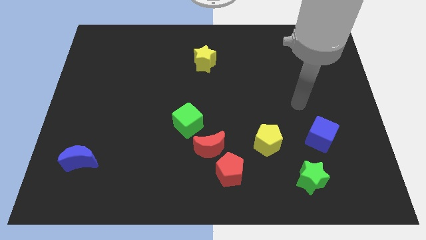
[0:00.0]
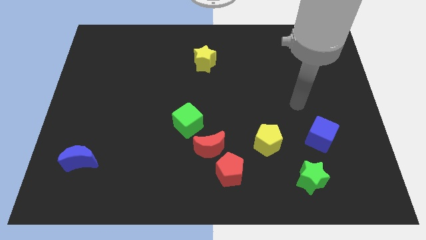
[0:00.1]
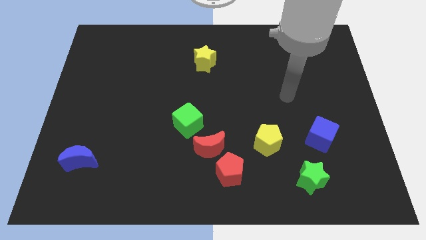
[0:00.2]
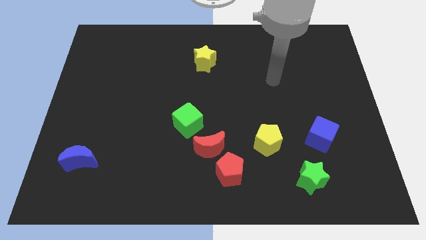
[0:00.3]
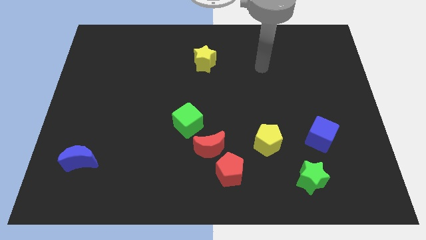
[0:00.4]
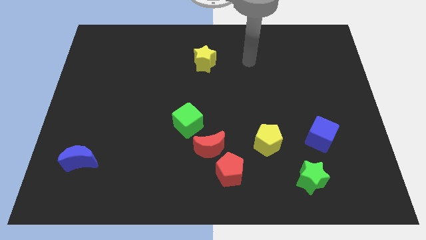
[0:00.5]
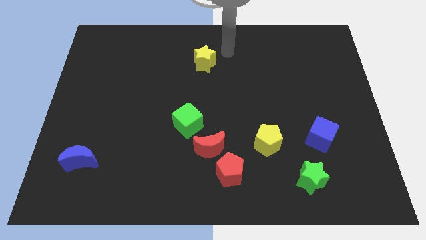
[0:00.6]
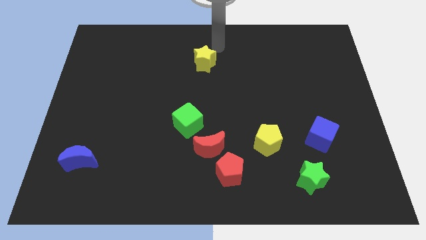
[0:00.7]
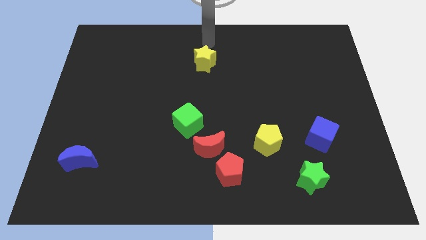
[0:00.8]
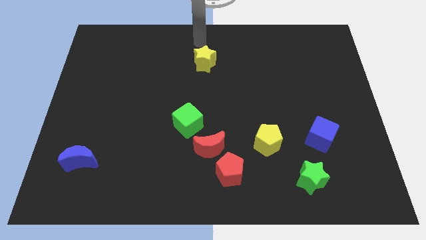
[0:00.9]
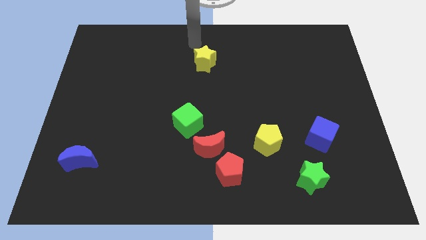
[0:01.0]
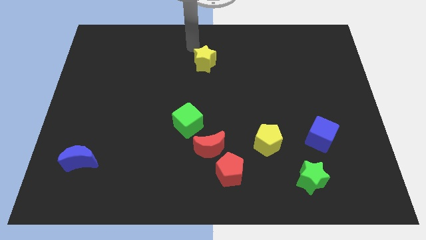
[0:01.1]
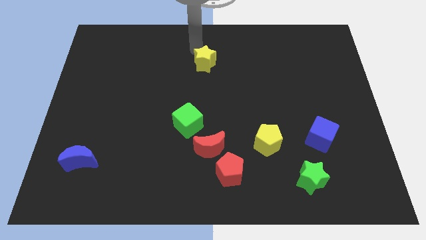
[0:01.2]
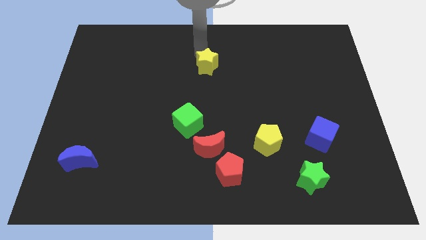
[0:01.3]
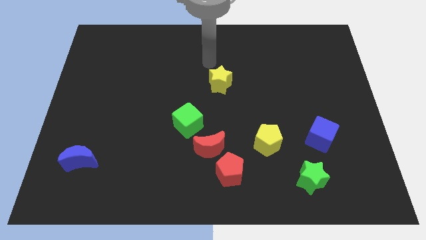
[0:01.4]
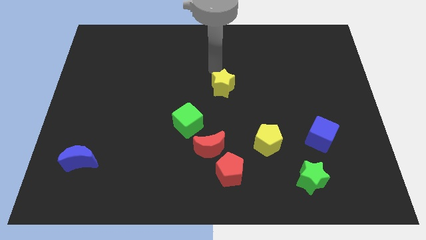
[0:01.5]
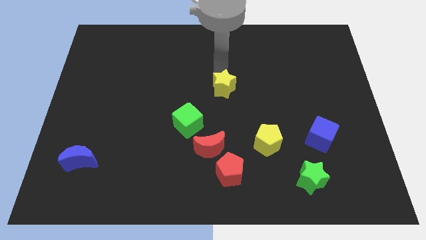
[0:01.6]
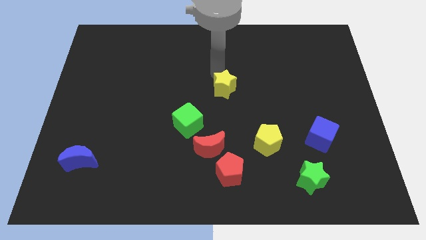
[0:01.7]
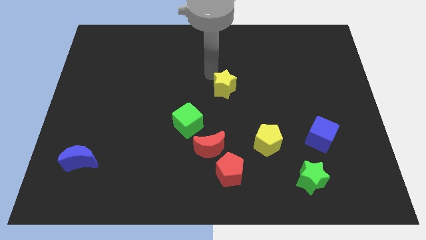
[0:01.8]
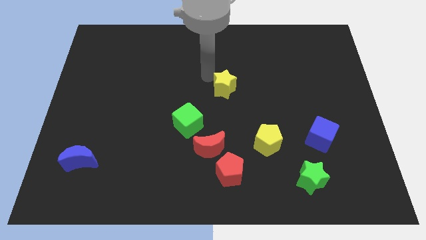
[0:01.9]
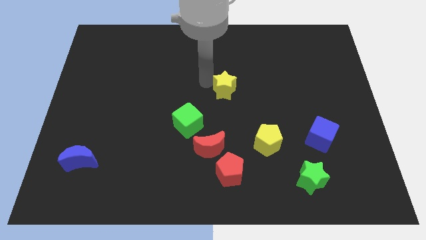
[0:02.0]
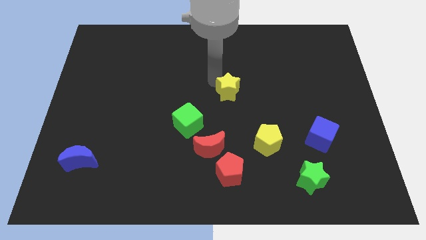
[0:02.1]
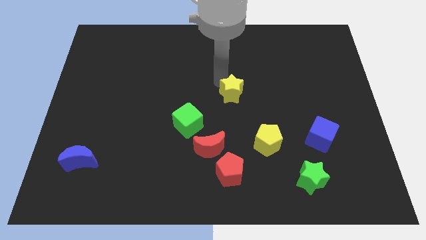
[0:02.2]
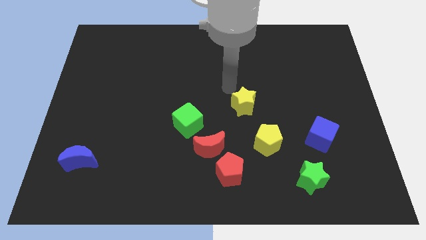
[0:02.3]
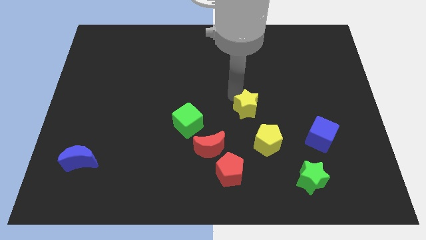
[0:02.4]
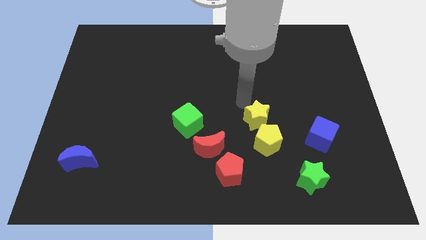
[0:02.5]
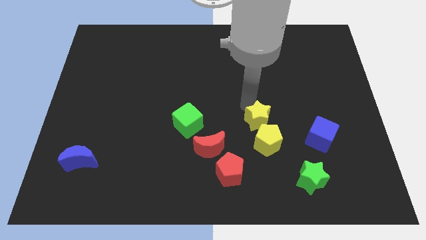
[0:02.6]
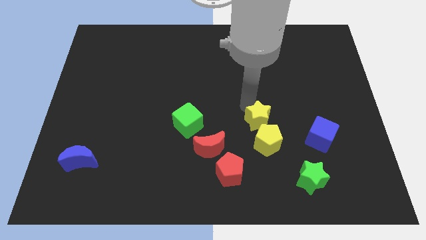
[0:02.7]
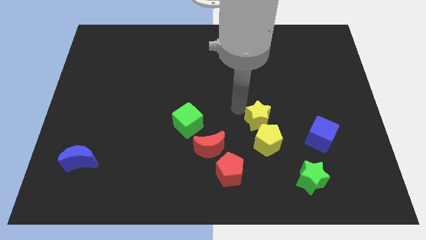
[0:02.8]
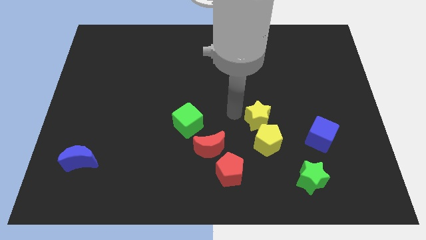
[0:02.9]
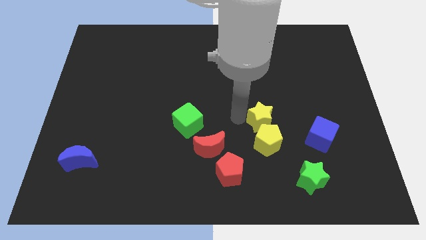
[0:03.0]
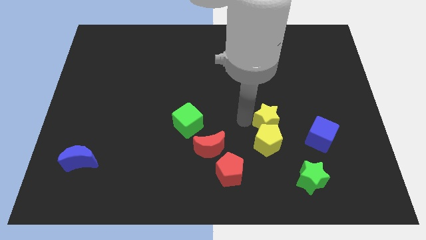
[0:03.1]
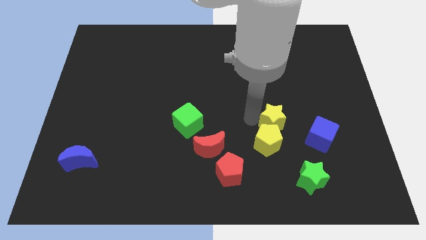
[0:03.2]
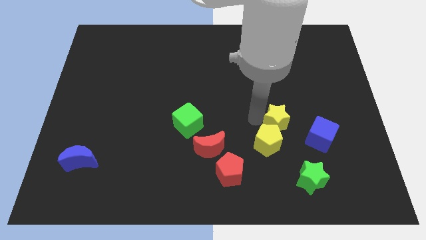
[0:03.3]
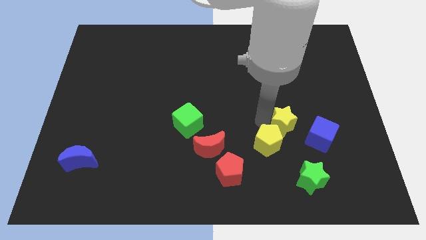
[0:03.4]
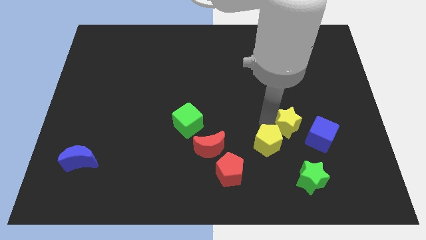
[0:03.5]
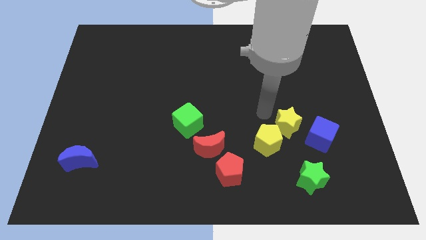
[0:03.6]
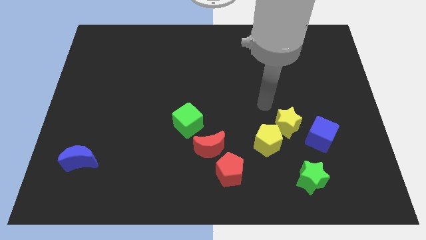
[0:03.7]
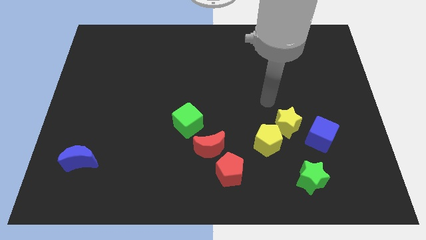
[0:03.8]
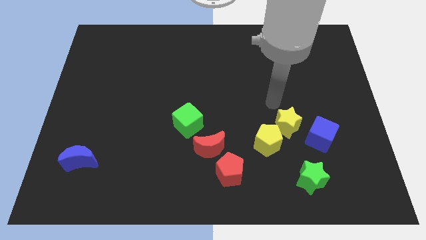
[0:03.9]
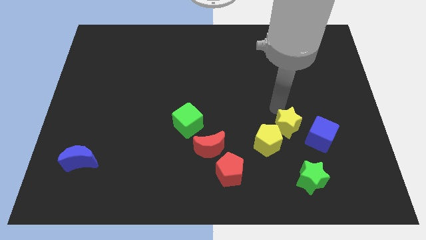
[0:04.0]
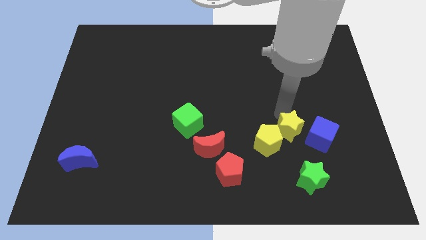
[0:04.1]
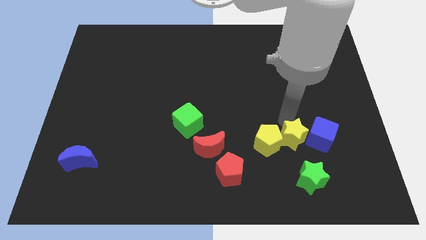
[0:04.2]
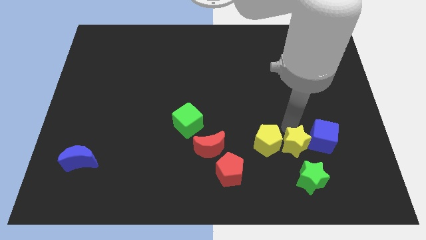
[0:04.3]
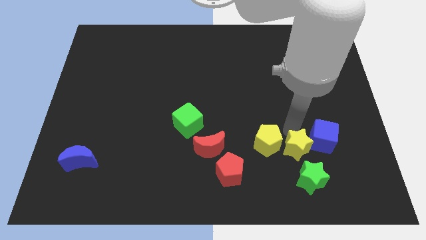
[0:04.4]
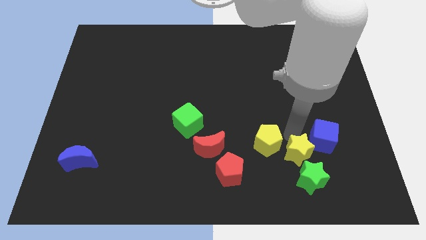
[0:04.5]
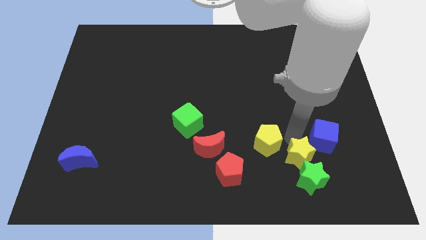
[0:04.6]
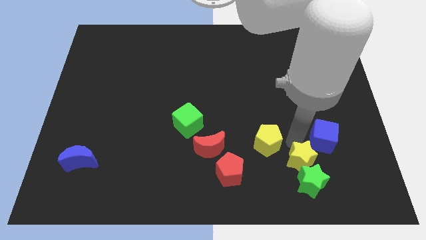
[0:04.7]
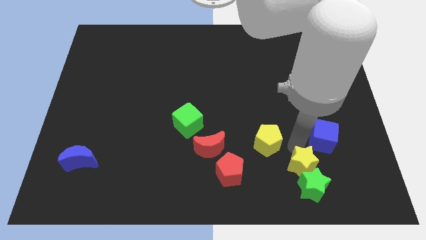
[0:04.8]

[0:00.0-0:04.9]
push the yellow star next to the green star

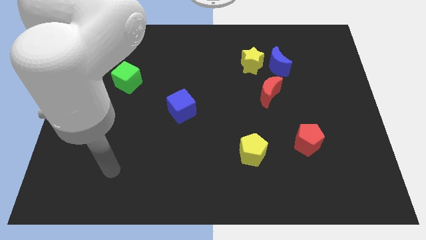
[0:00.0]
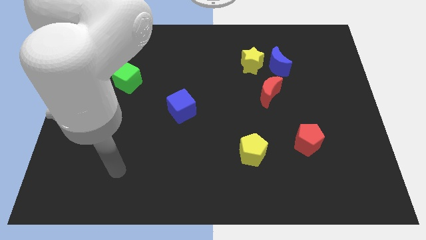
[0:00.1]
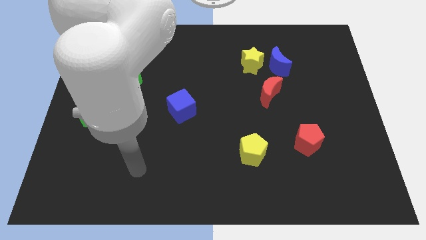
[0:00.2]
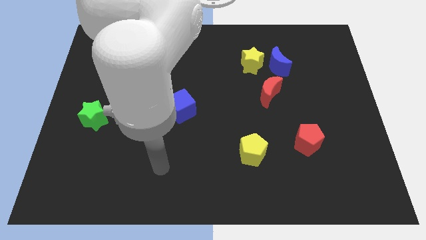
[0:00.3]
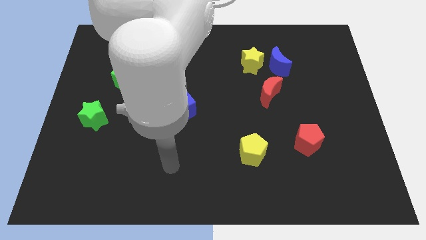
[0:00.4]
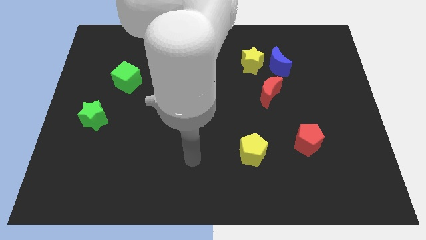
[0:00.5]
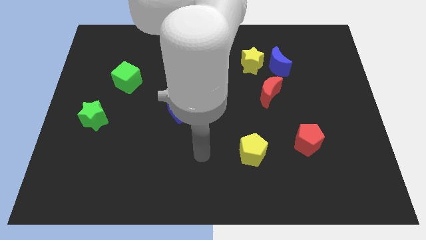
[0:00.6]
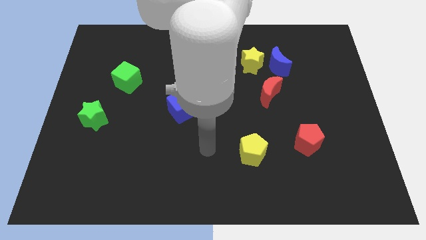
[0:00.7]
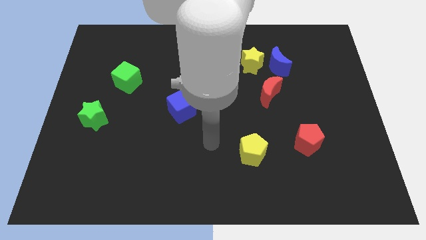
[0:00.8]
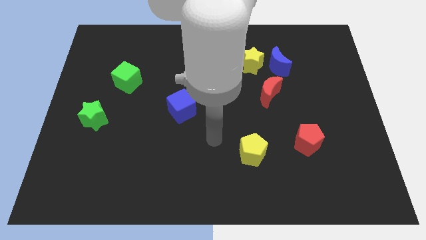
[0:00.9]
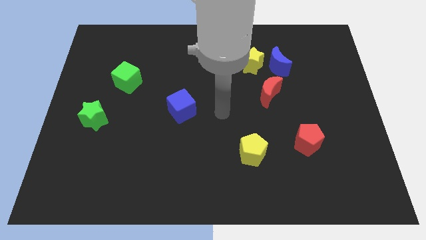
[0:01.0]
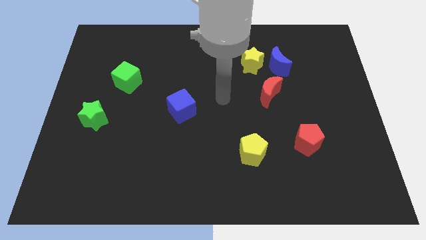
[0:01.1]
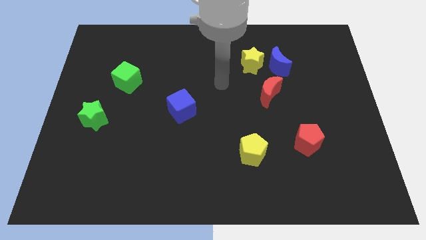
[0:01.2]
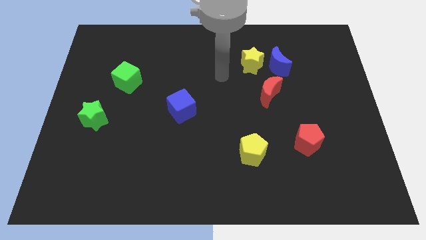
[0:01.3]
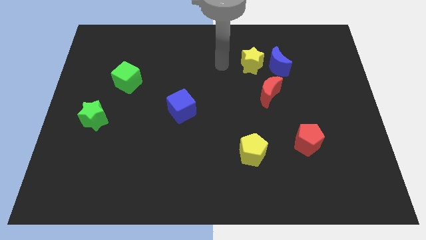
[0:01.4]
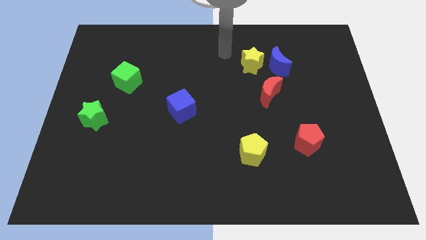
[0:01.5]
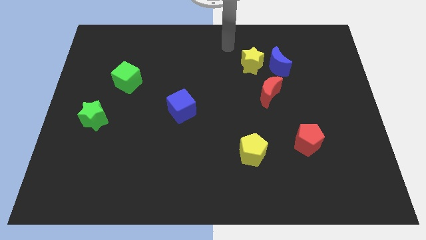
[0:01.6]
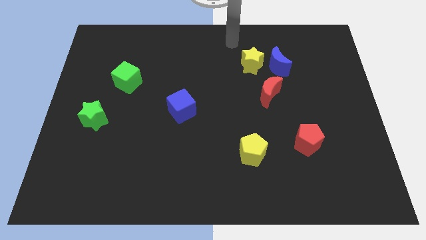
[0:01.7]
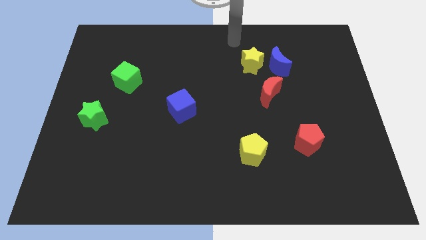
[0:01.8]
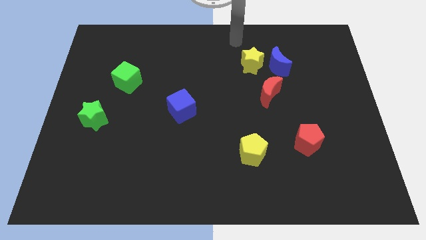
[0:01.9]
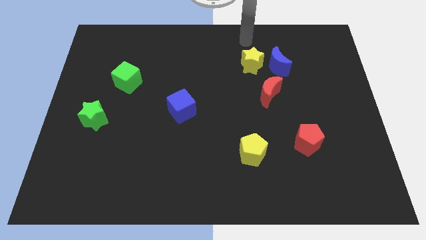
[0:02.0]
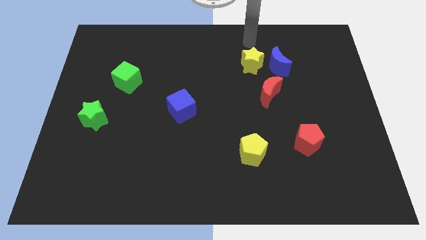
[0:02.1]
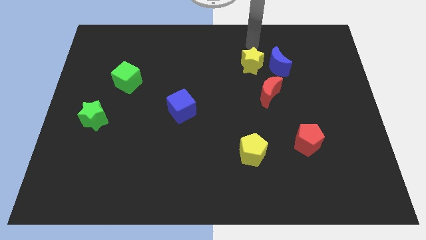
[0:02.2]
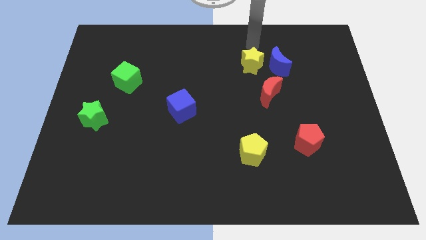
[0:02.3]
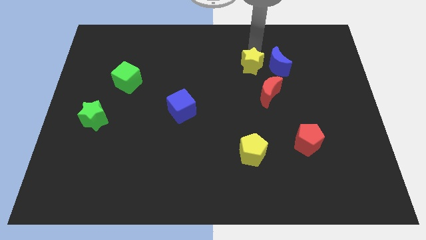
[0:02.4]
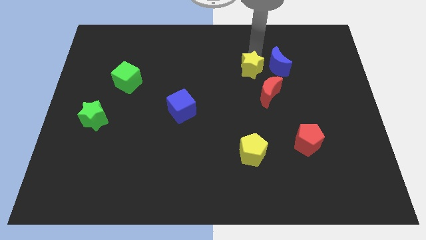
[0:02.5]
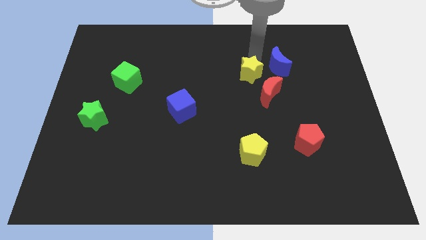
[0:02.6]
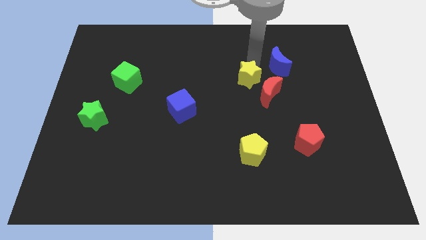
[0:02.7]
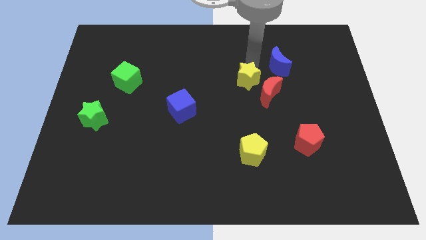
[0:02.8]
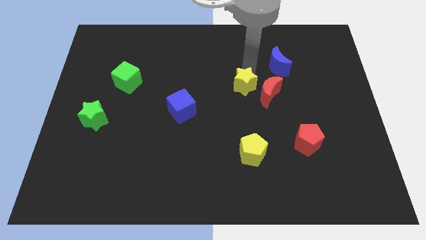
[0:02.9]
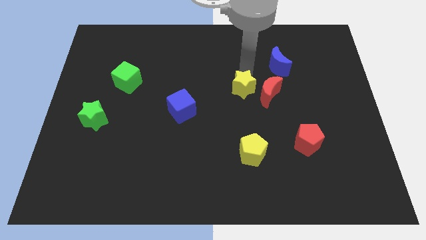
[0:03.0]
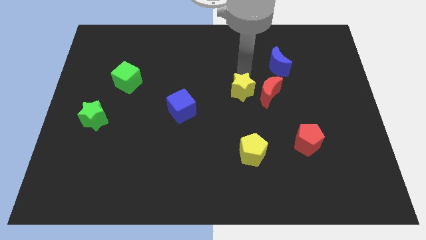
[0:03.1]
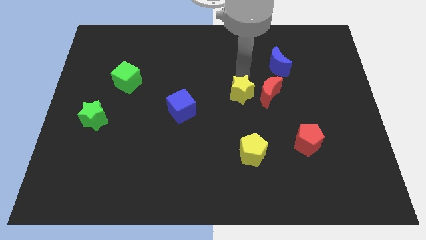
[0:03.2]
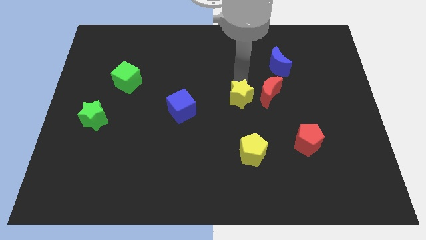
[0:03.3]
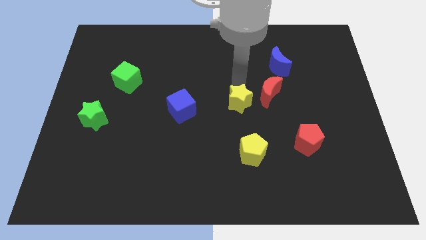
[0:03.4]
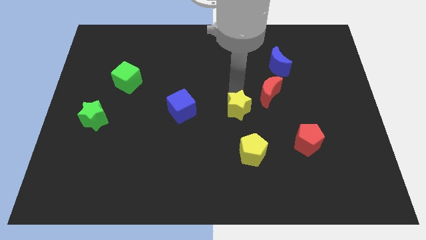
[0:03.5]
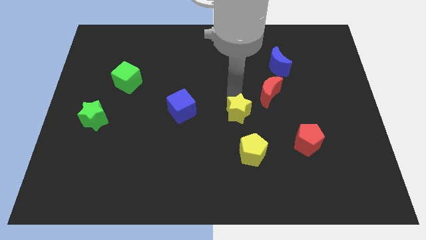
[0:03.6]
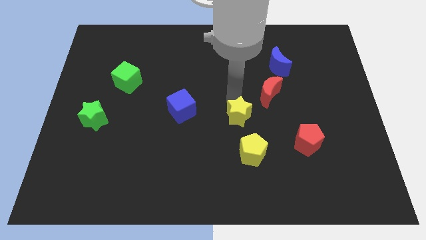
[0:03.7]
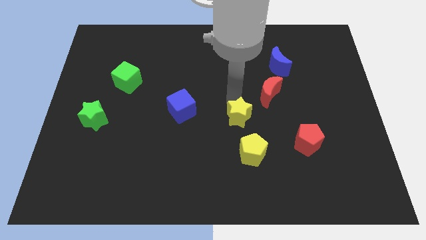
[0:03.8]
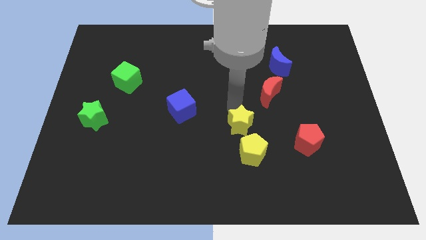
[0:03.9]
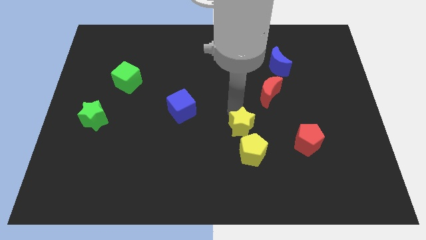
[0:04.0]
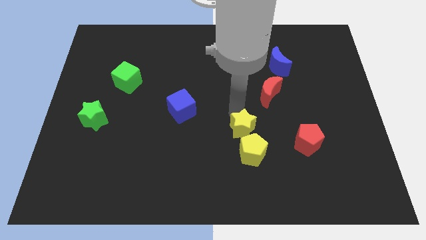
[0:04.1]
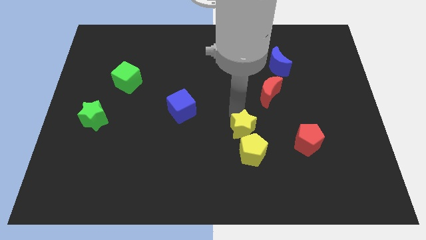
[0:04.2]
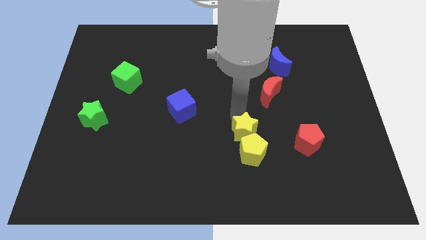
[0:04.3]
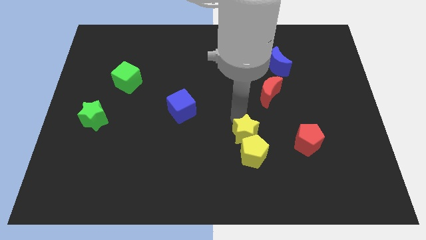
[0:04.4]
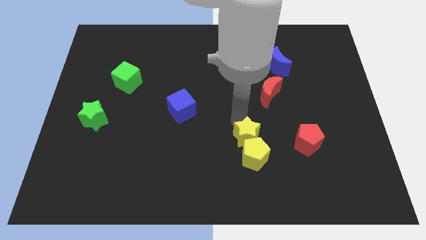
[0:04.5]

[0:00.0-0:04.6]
move the yellow star next to the yellow pentagon
